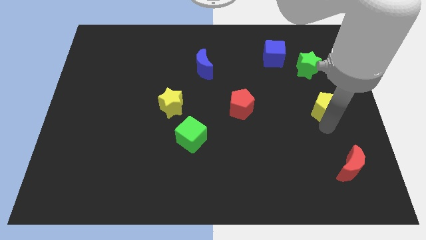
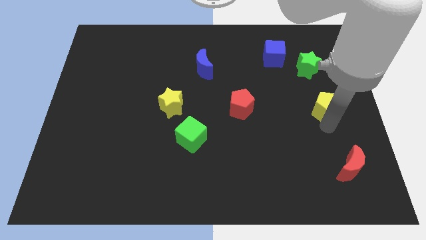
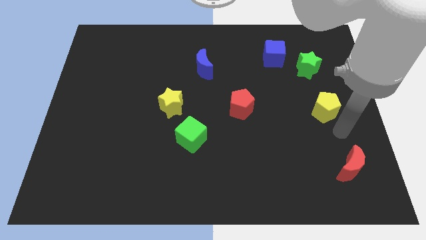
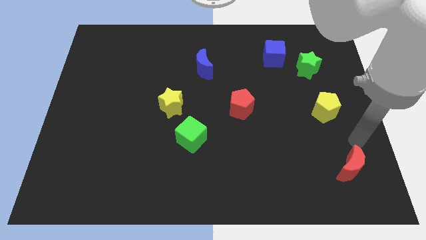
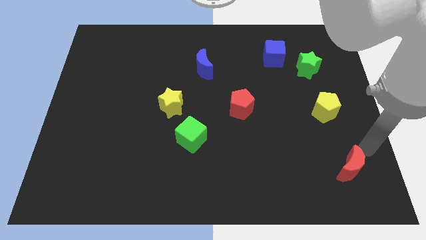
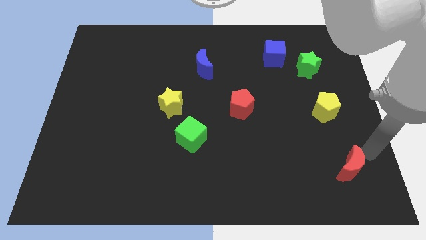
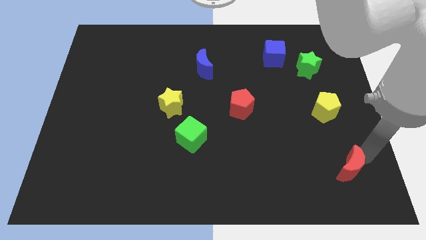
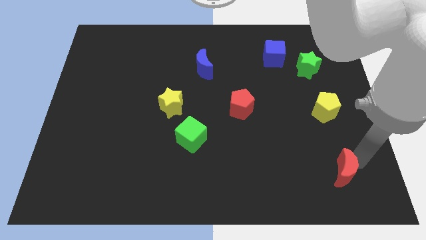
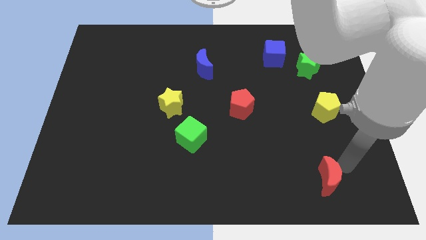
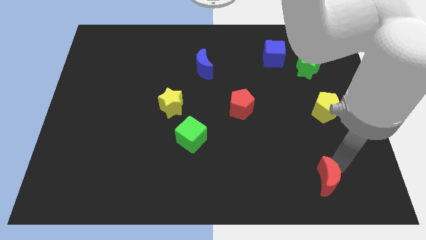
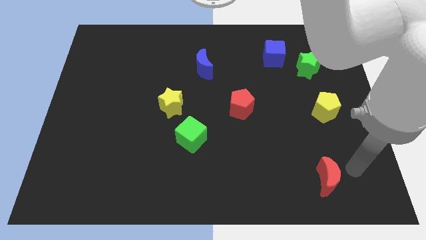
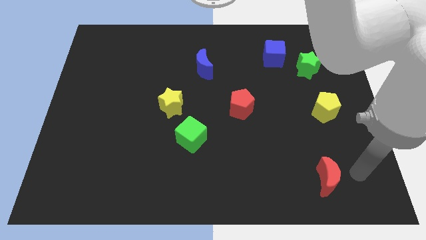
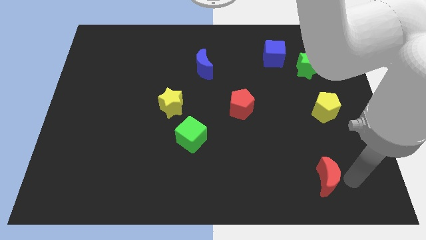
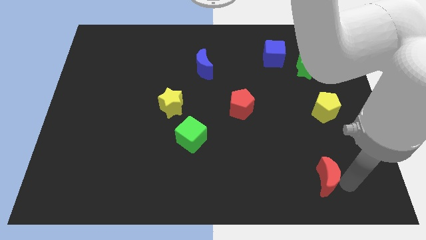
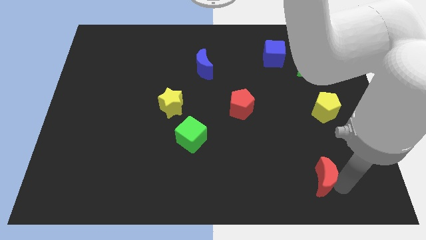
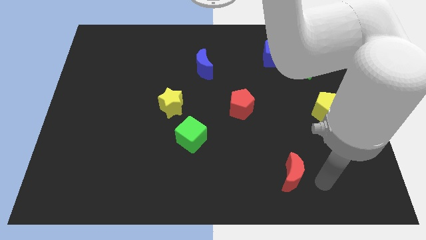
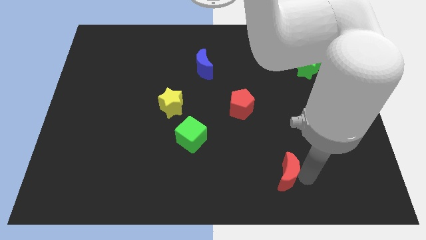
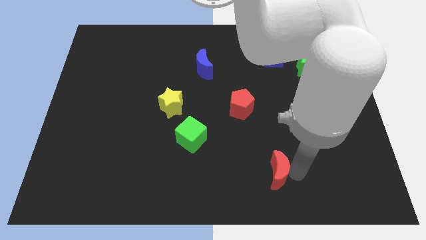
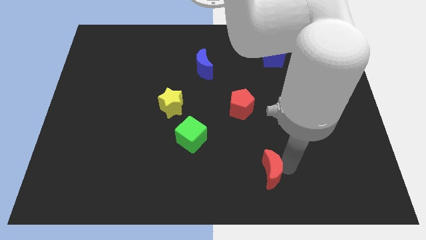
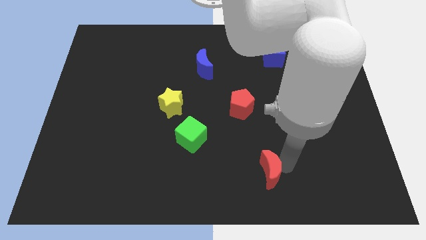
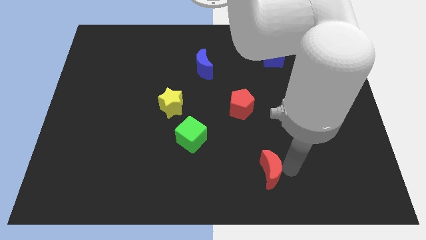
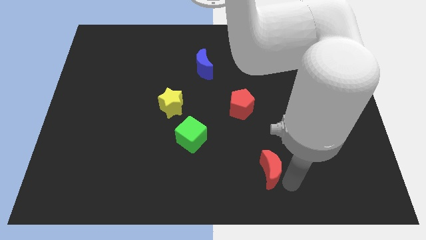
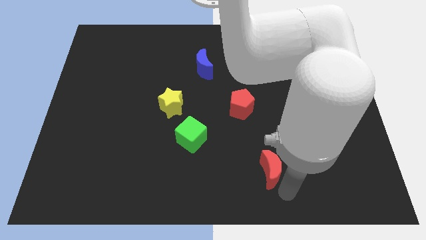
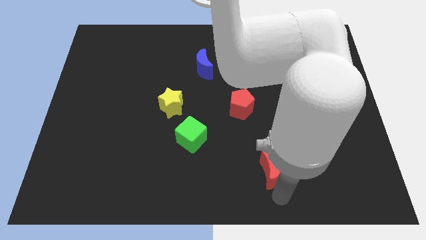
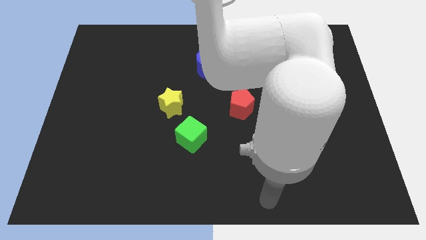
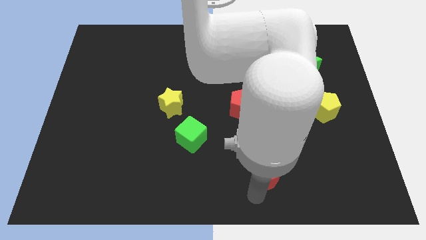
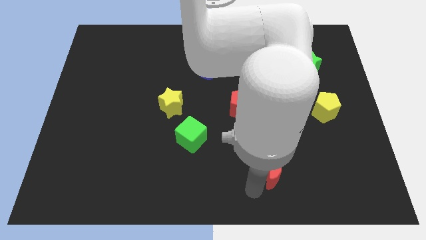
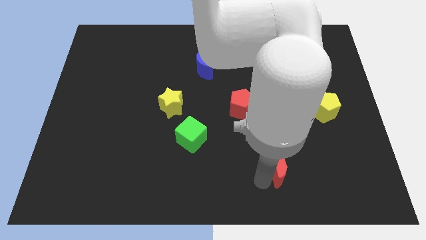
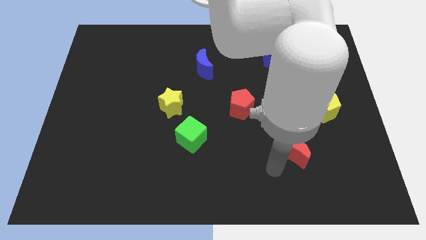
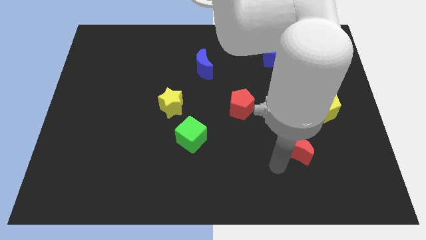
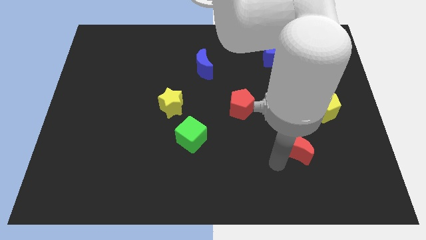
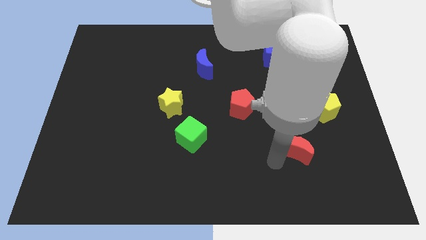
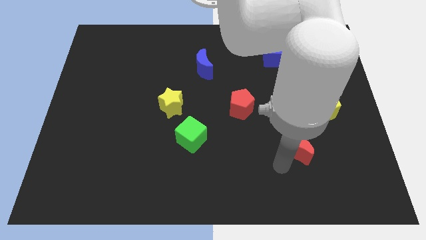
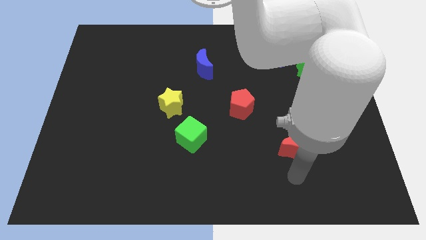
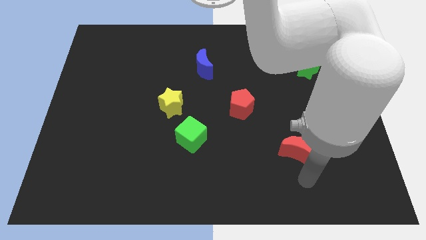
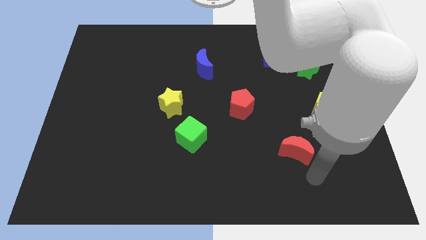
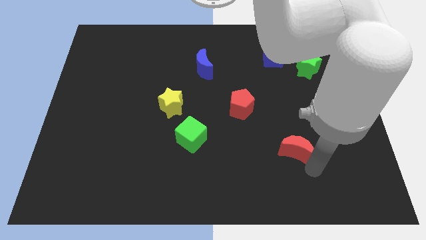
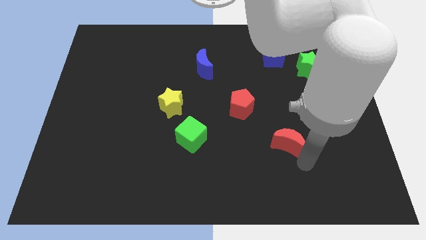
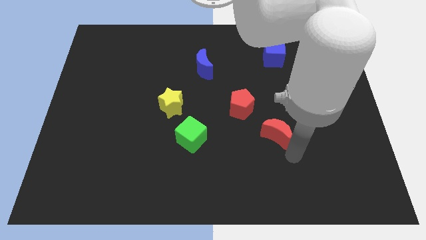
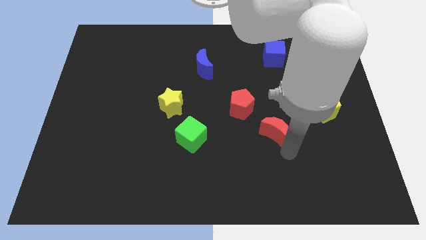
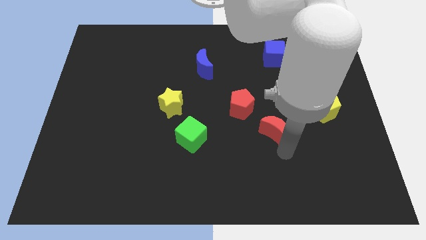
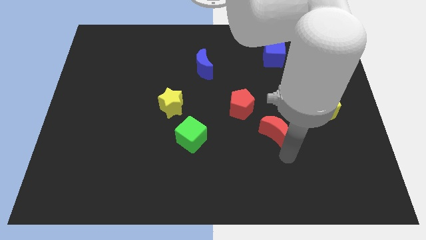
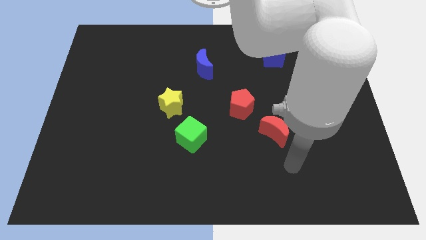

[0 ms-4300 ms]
place red moon to the bottom right of red pentagon

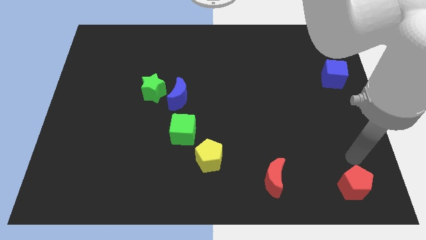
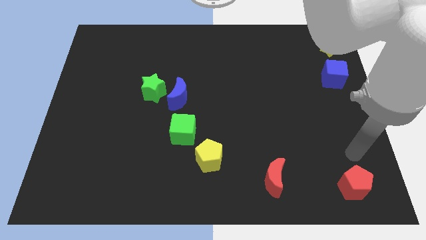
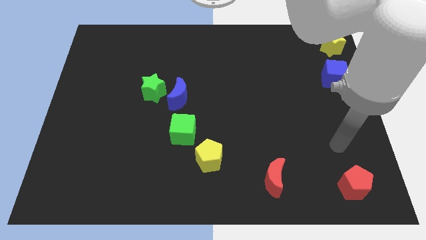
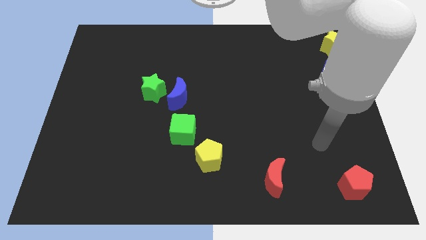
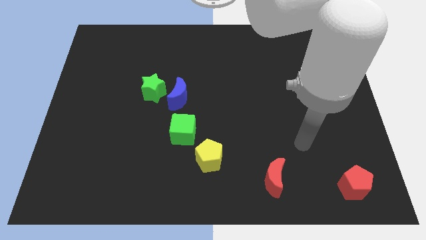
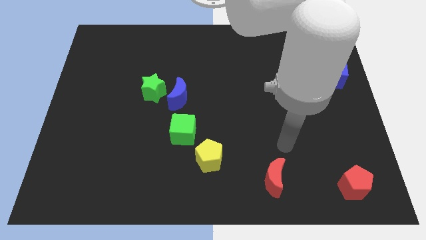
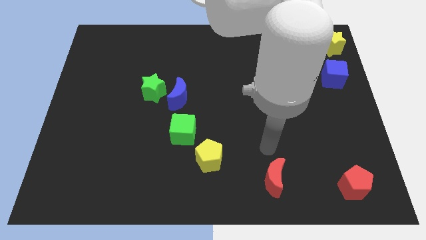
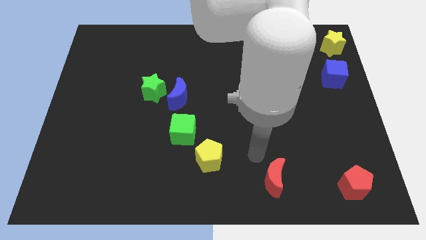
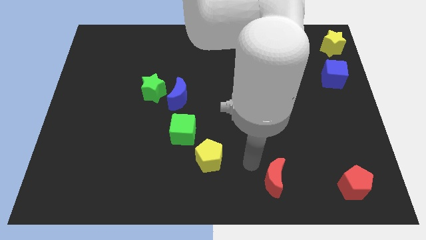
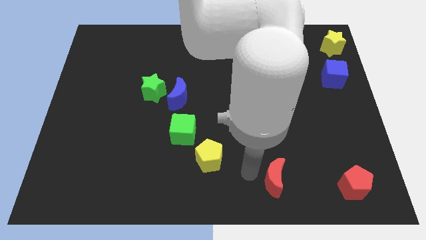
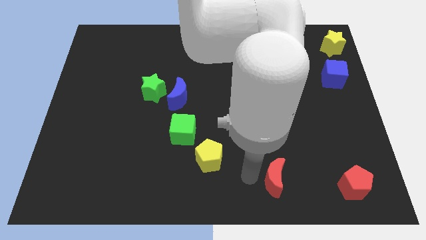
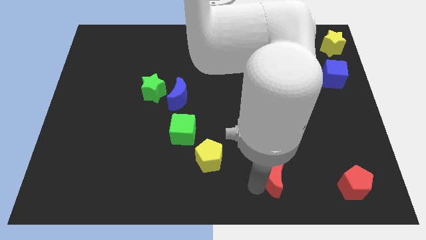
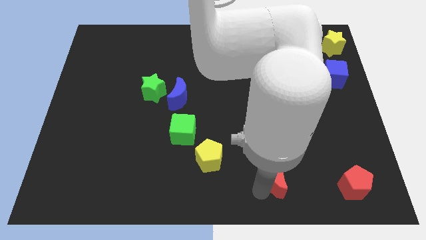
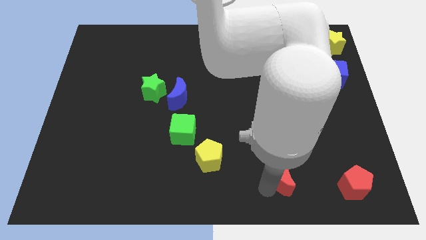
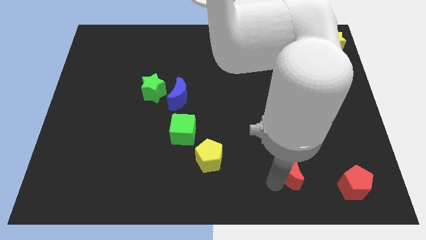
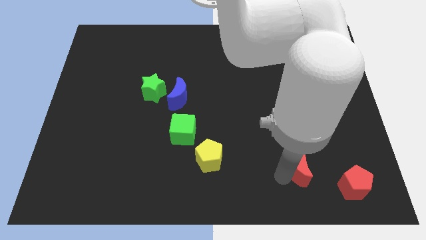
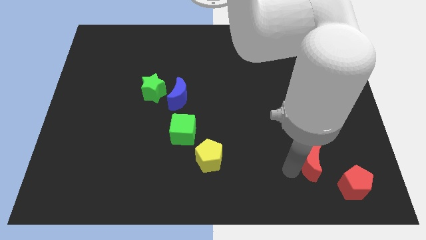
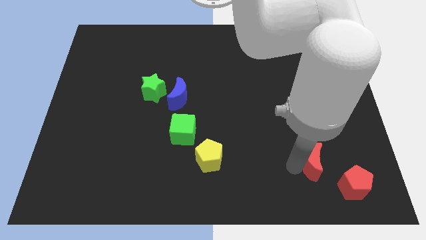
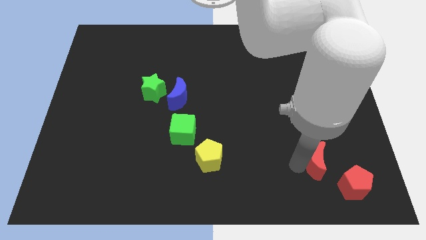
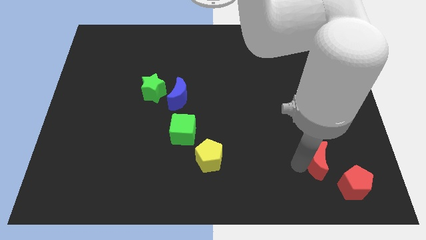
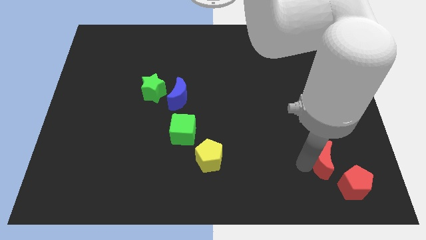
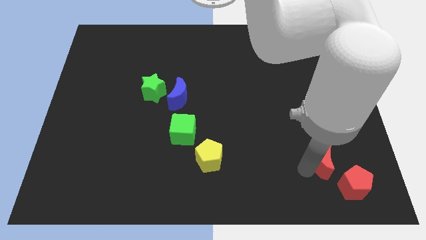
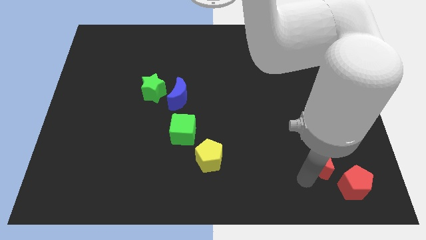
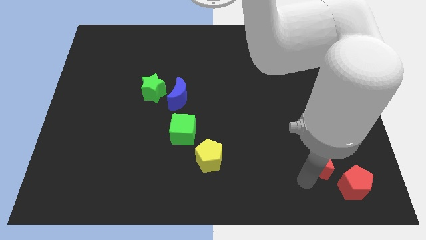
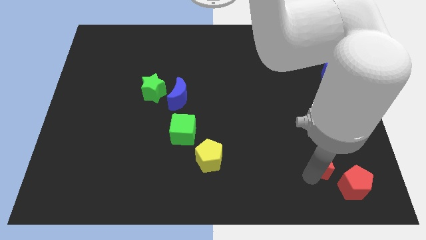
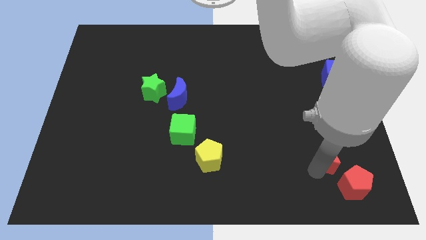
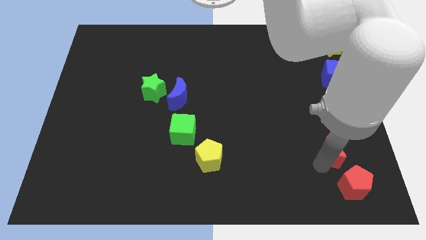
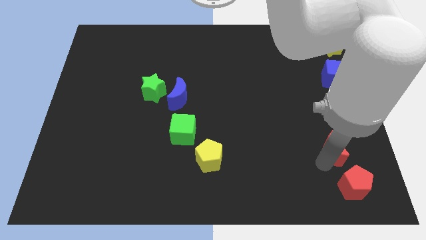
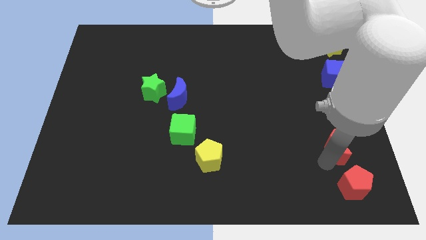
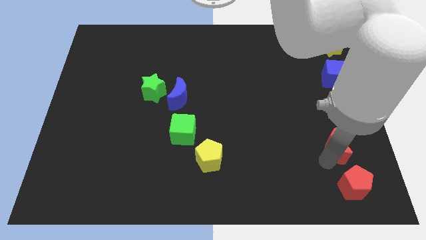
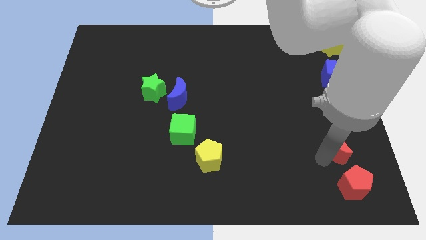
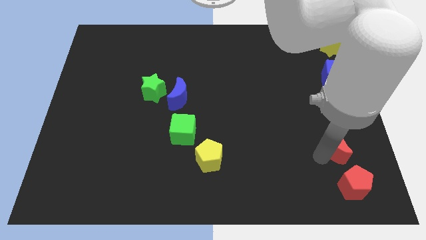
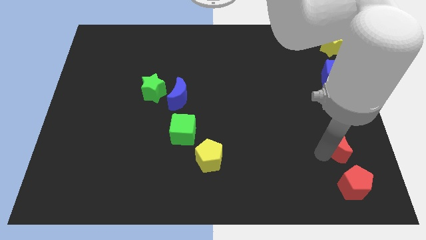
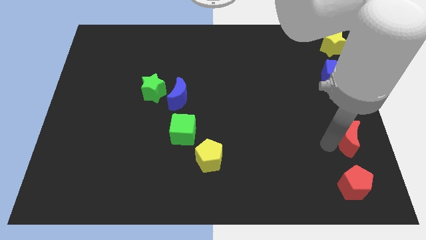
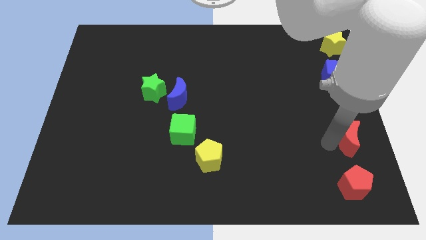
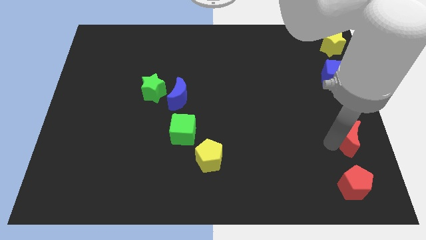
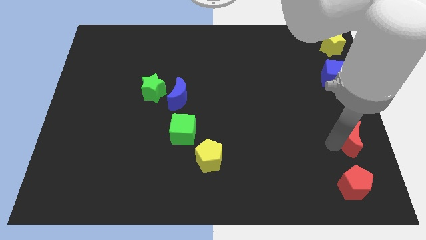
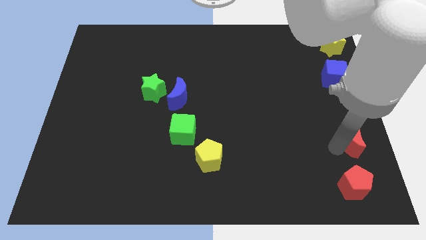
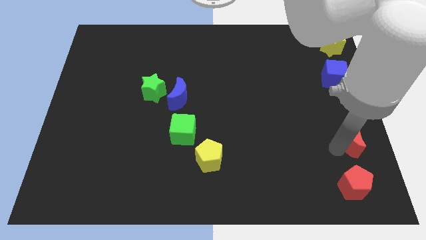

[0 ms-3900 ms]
place red moon to the top of red pentagon

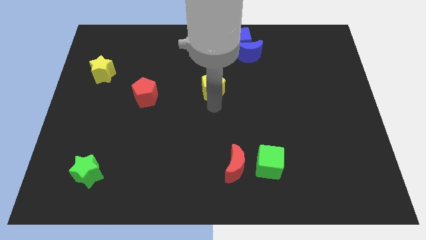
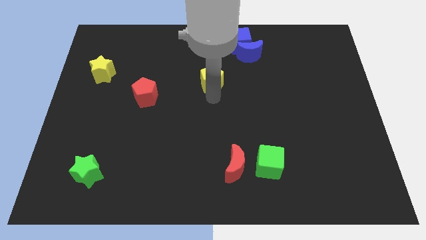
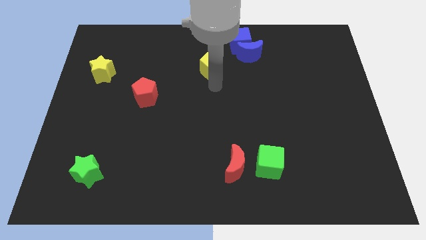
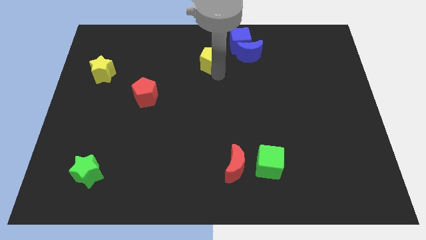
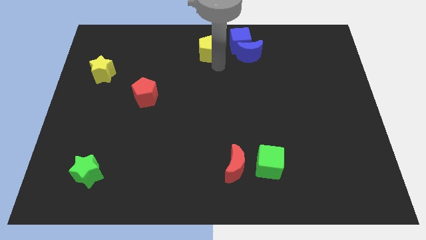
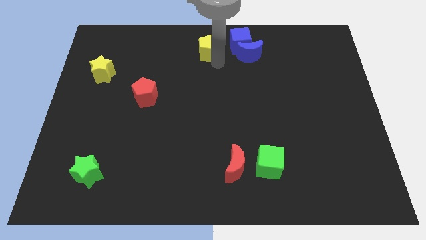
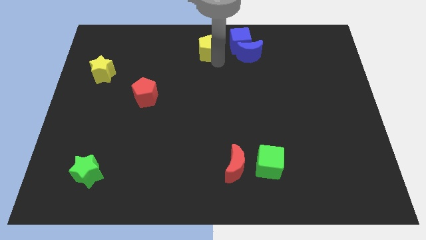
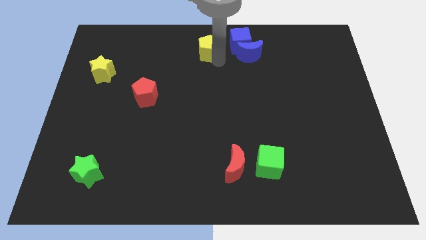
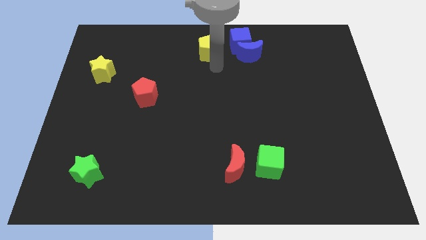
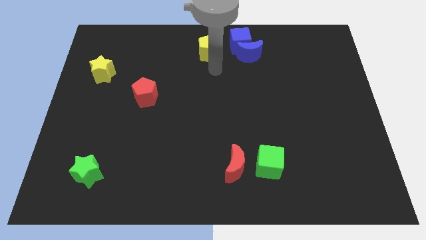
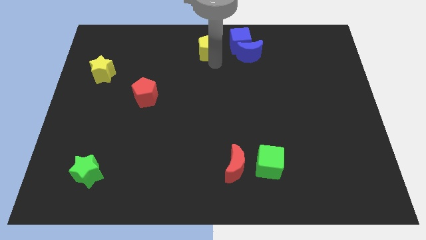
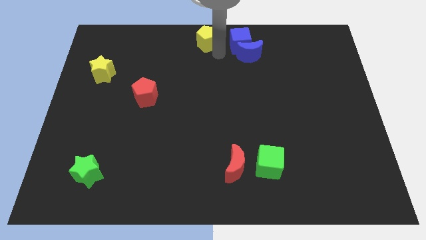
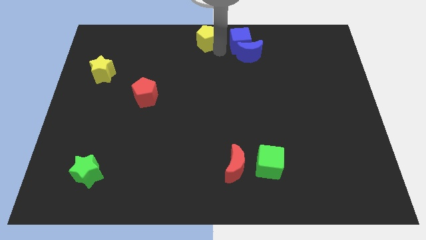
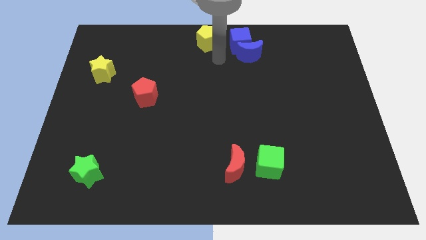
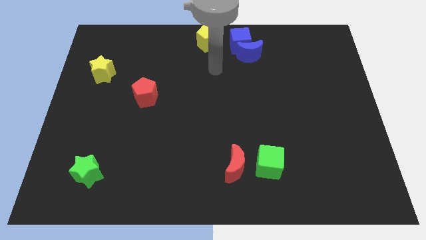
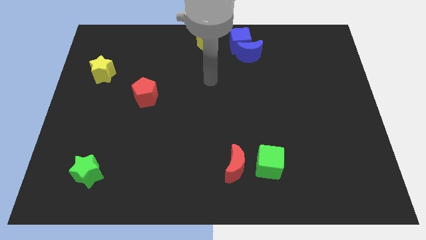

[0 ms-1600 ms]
drag the yellow pentagon to the top center
